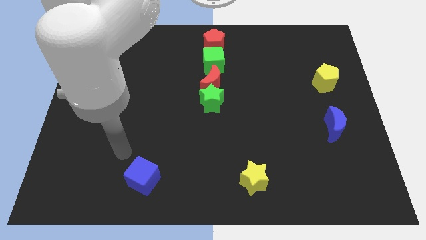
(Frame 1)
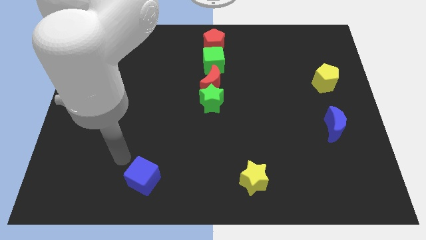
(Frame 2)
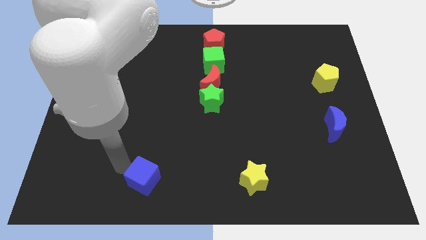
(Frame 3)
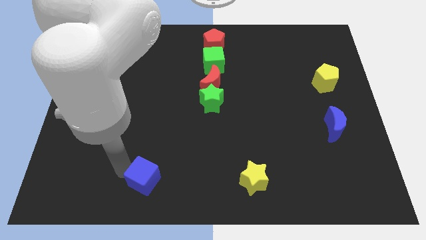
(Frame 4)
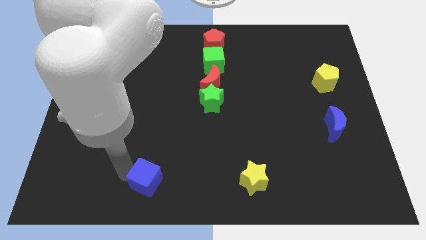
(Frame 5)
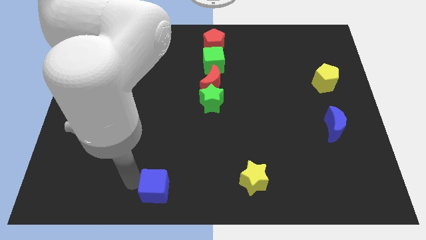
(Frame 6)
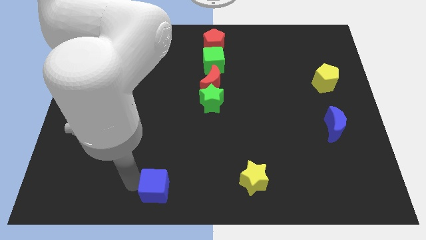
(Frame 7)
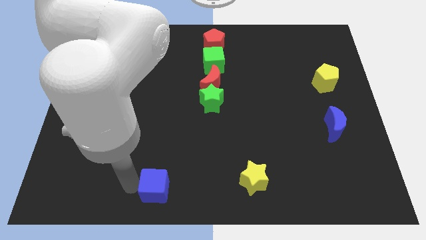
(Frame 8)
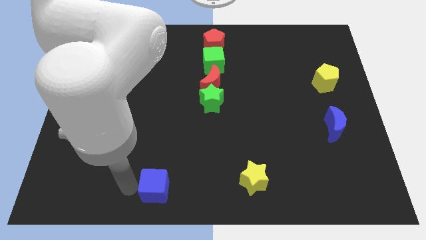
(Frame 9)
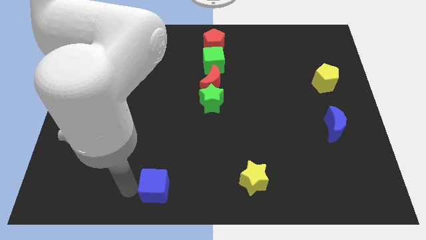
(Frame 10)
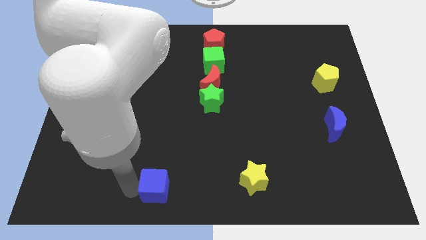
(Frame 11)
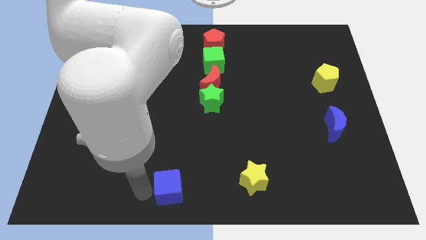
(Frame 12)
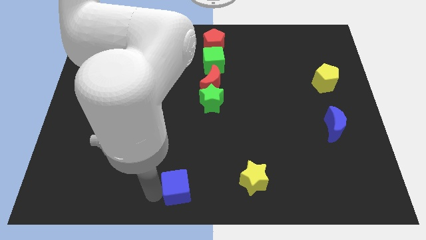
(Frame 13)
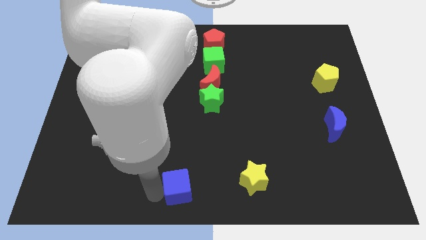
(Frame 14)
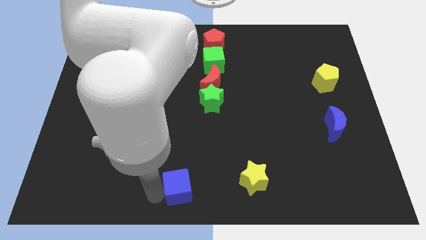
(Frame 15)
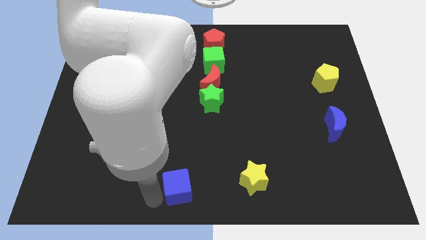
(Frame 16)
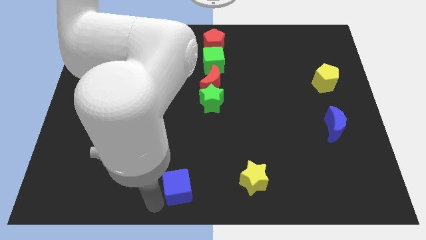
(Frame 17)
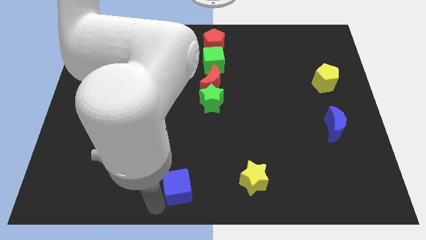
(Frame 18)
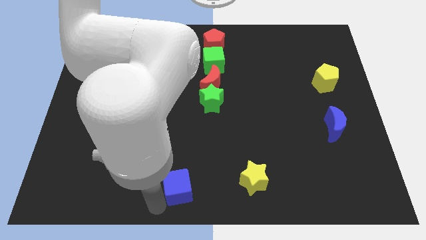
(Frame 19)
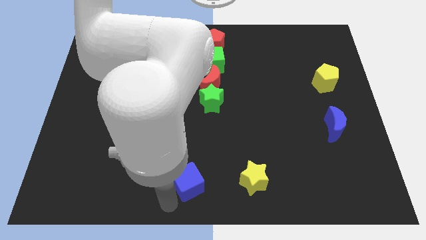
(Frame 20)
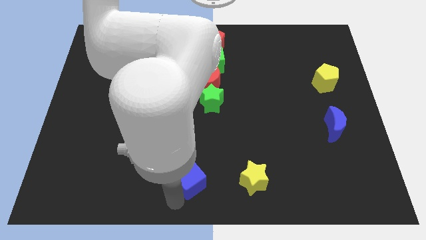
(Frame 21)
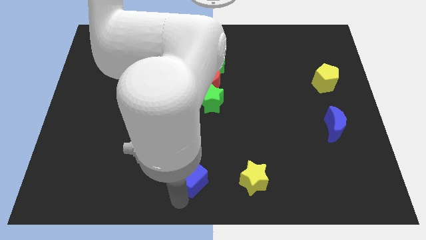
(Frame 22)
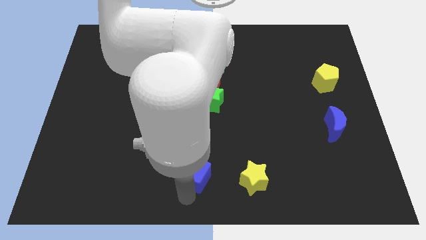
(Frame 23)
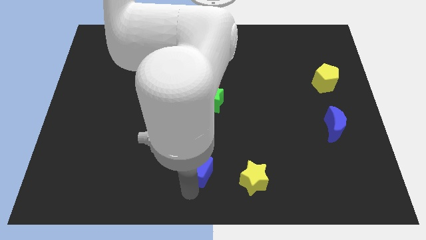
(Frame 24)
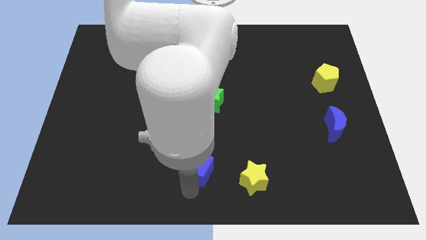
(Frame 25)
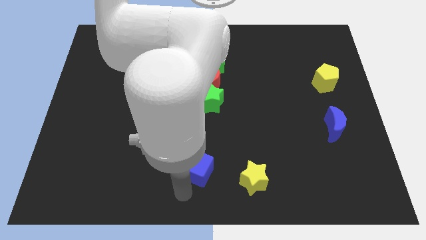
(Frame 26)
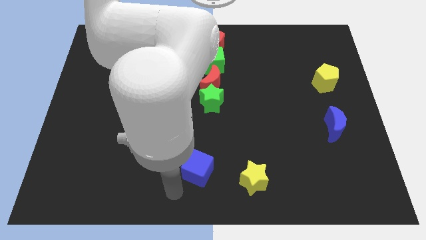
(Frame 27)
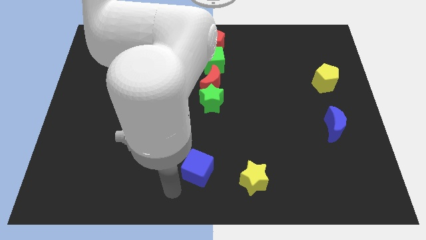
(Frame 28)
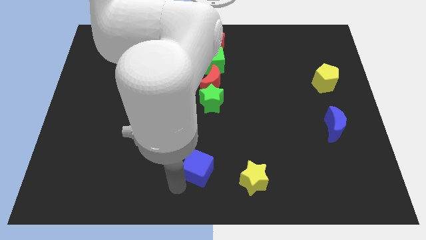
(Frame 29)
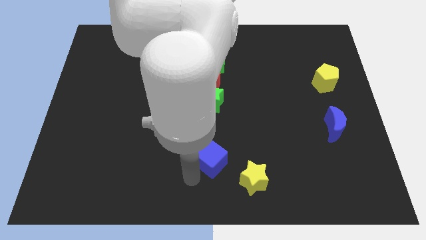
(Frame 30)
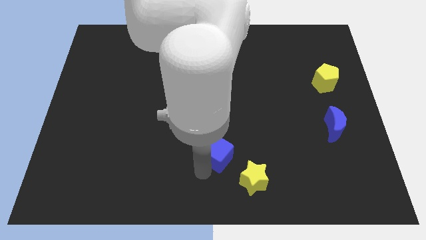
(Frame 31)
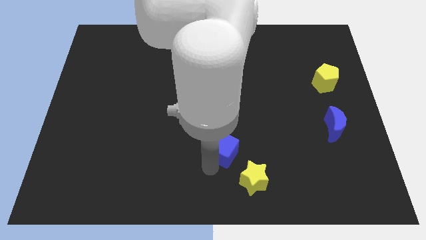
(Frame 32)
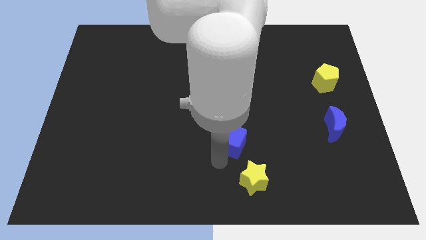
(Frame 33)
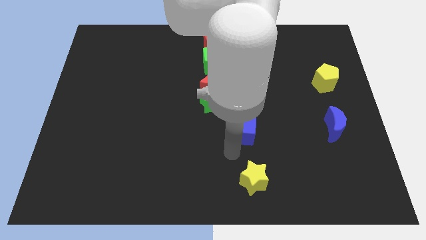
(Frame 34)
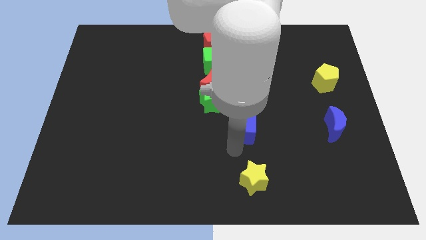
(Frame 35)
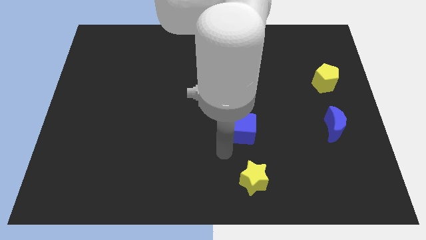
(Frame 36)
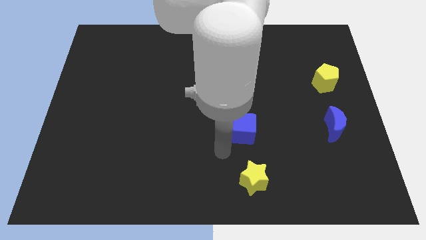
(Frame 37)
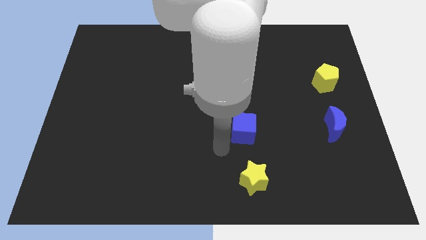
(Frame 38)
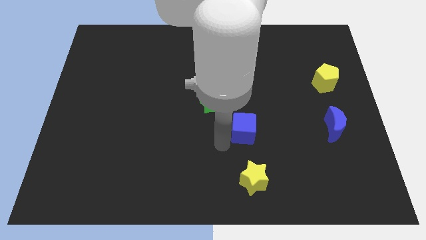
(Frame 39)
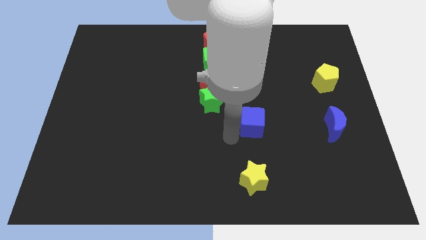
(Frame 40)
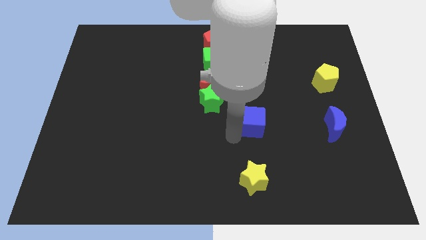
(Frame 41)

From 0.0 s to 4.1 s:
push the blue cube to the top of the yellow star

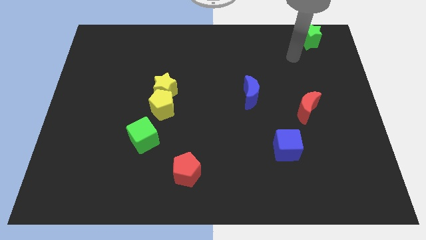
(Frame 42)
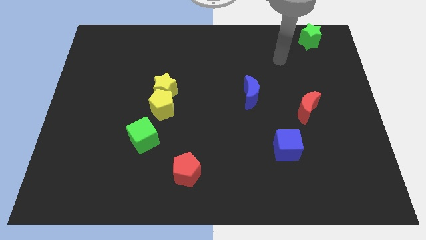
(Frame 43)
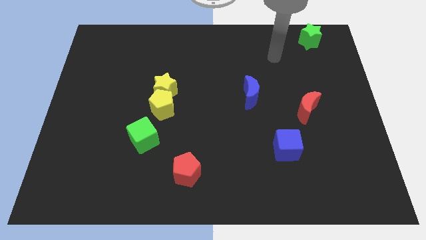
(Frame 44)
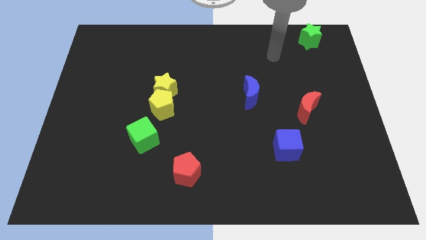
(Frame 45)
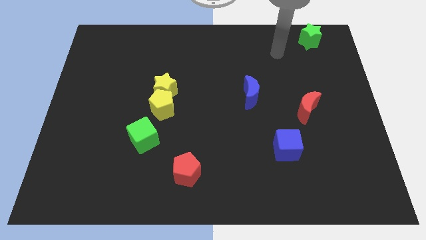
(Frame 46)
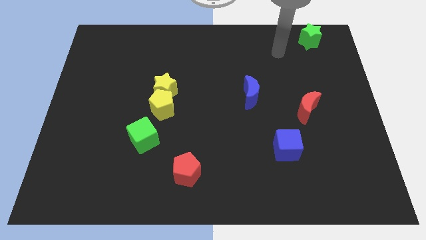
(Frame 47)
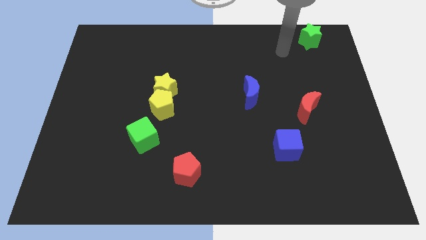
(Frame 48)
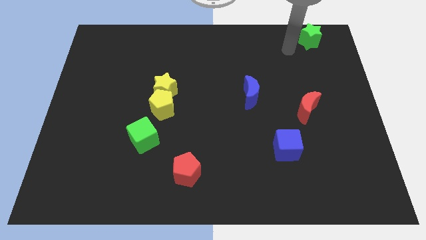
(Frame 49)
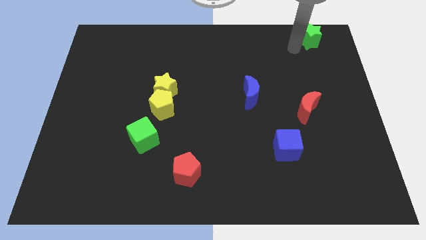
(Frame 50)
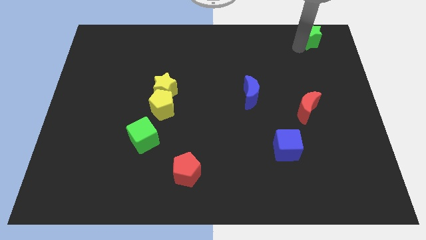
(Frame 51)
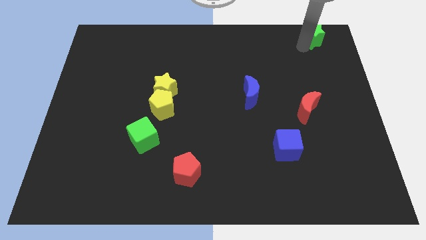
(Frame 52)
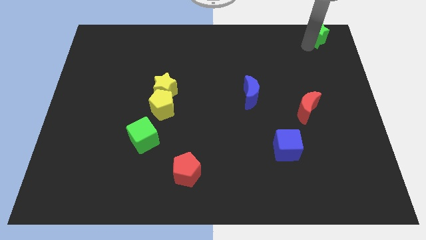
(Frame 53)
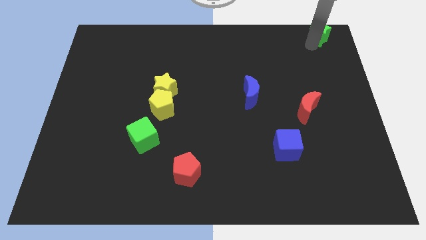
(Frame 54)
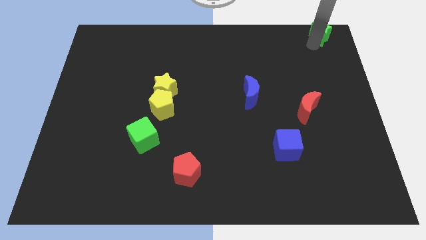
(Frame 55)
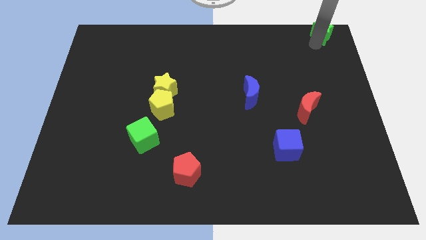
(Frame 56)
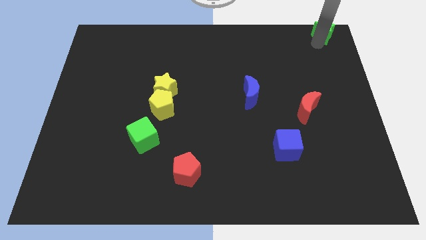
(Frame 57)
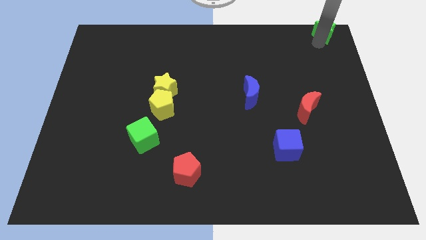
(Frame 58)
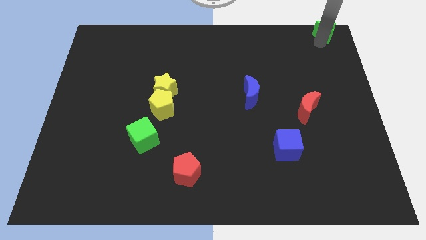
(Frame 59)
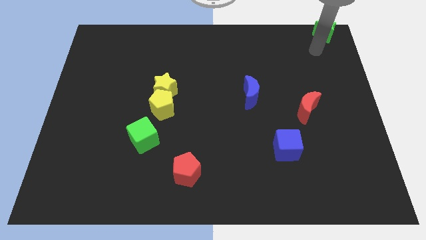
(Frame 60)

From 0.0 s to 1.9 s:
push the green star towards the top right corner

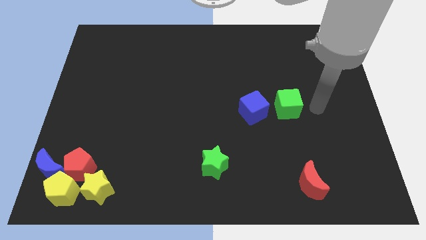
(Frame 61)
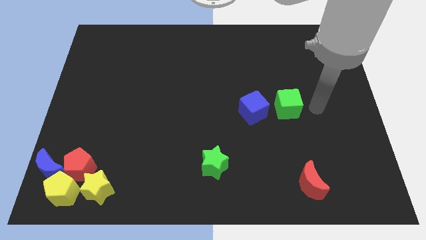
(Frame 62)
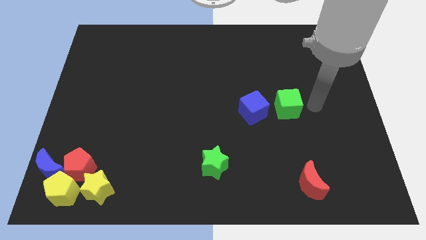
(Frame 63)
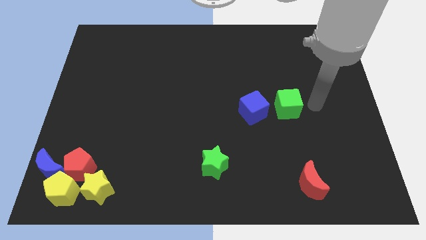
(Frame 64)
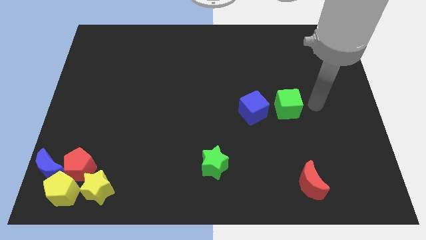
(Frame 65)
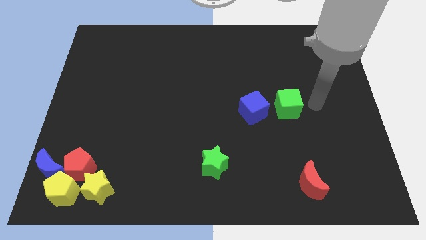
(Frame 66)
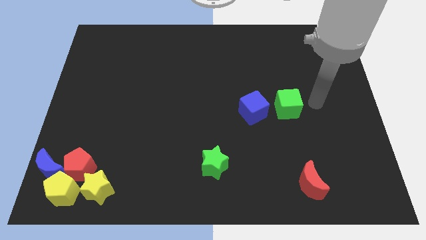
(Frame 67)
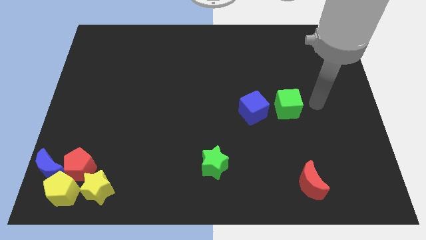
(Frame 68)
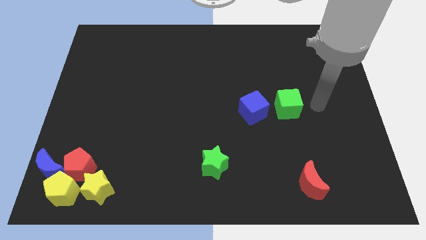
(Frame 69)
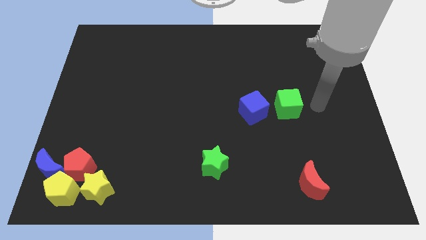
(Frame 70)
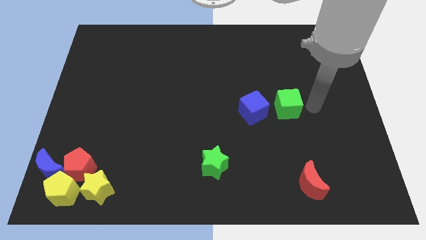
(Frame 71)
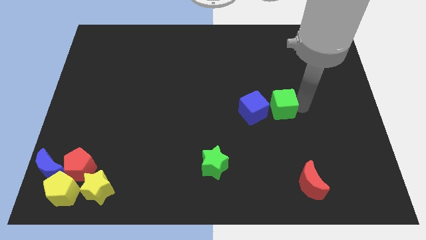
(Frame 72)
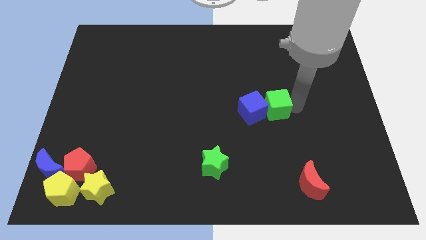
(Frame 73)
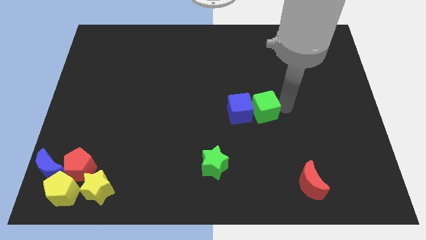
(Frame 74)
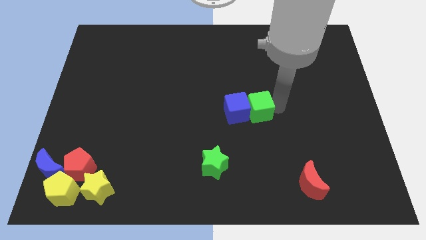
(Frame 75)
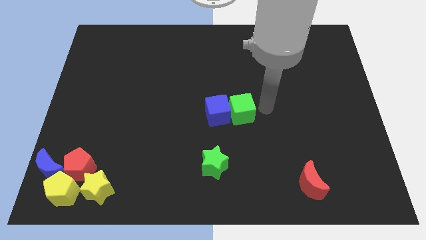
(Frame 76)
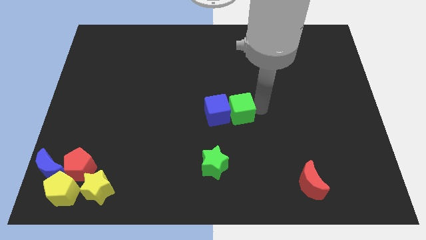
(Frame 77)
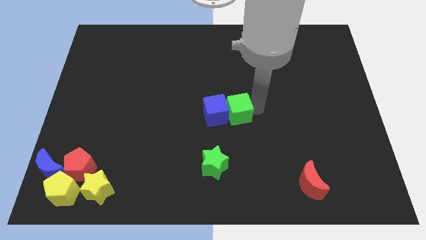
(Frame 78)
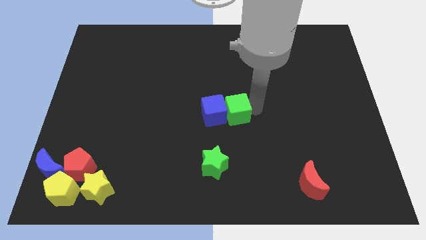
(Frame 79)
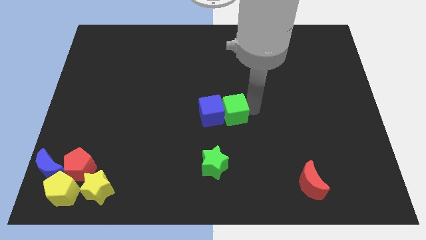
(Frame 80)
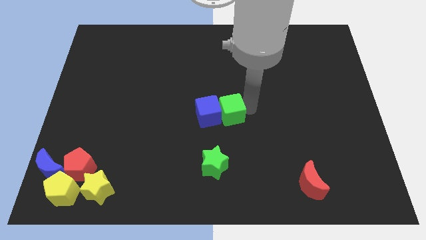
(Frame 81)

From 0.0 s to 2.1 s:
push the blue and green cubes to the center of the board

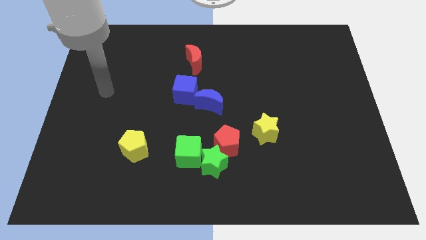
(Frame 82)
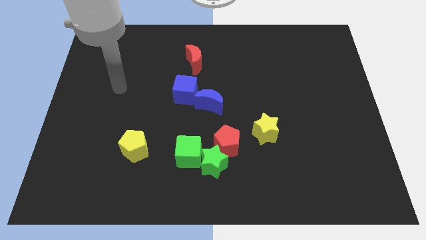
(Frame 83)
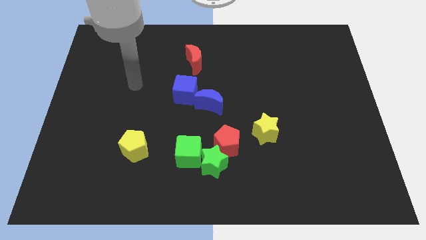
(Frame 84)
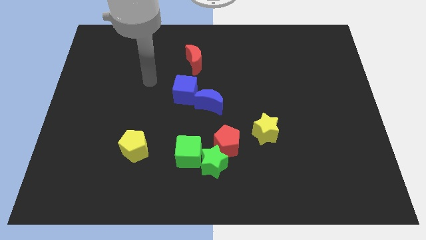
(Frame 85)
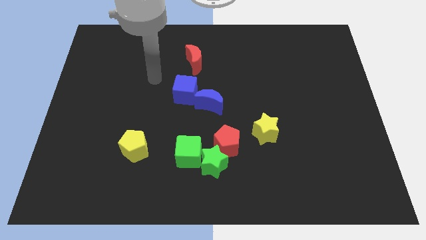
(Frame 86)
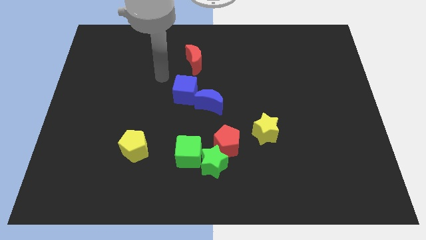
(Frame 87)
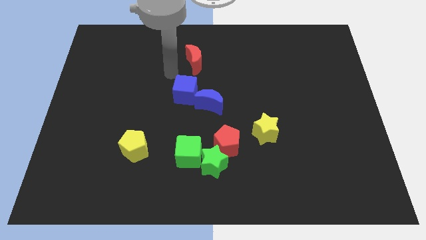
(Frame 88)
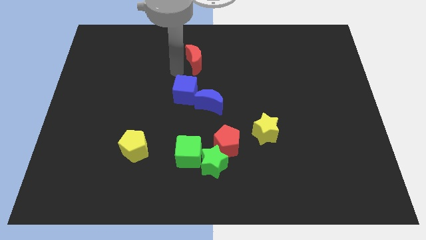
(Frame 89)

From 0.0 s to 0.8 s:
move the arm left to the red moon

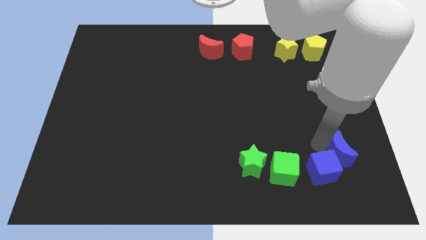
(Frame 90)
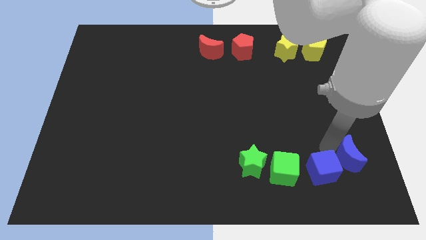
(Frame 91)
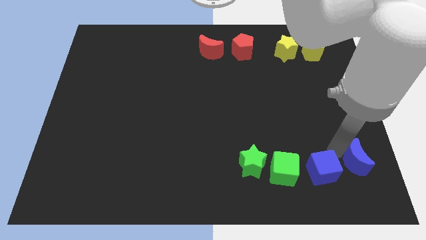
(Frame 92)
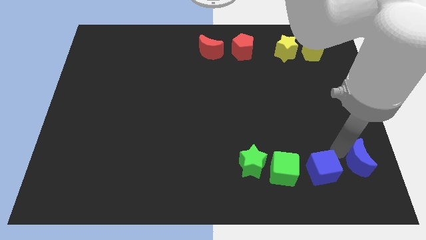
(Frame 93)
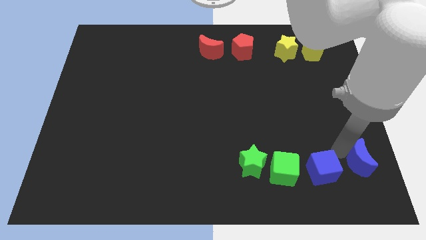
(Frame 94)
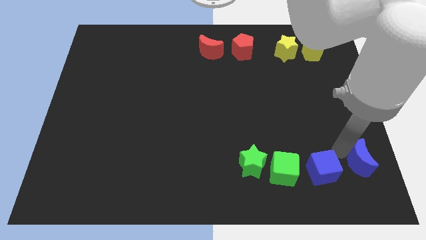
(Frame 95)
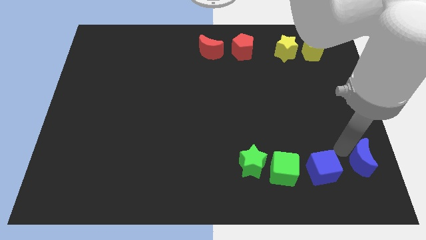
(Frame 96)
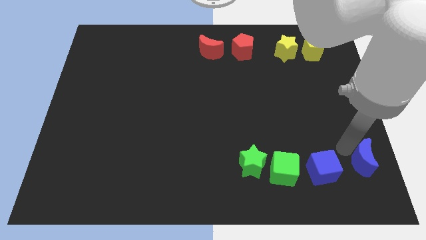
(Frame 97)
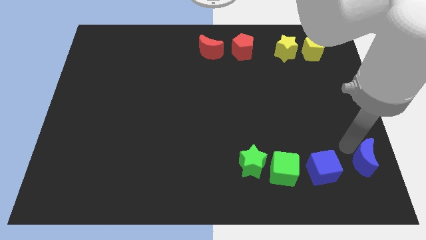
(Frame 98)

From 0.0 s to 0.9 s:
push the blue crescent slightly to the right
